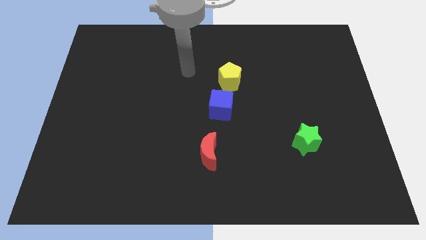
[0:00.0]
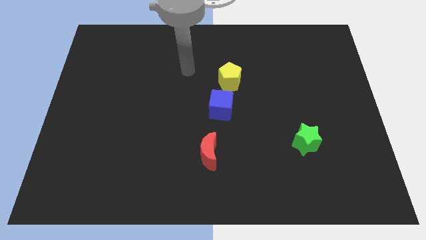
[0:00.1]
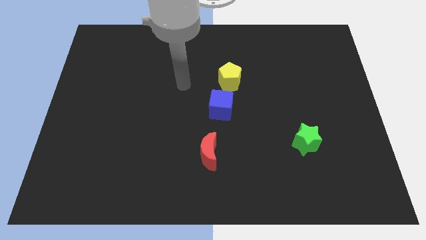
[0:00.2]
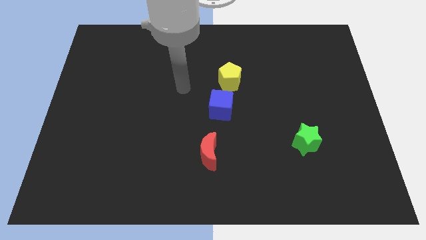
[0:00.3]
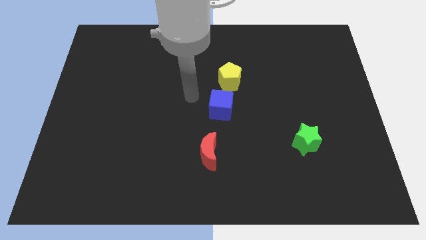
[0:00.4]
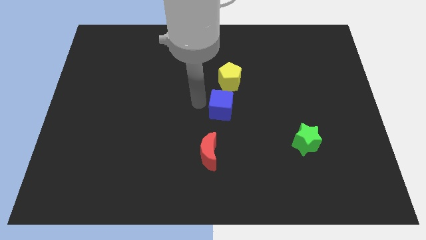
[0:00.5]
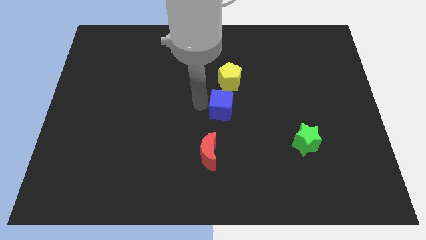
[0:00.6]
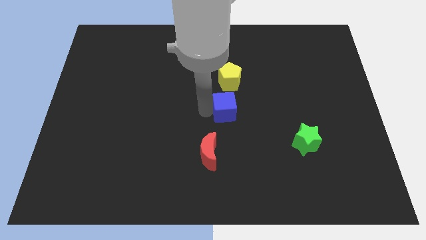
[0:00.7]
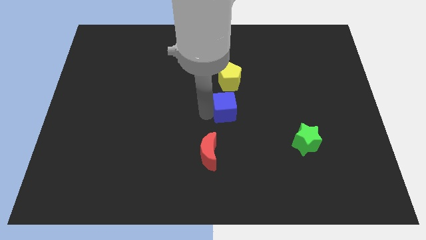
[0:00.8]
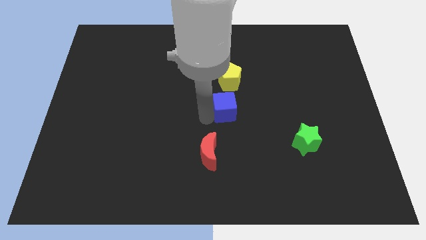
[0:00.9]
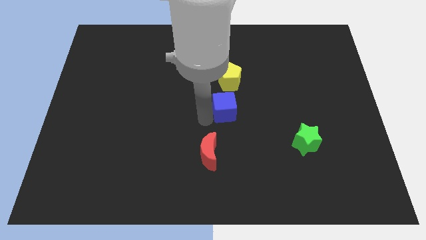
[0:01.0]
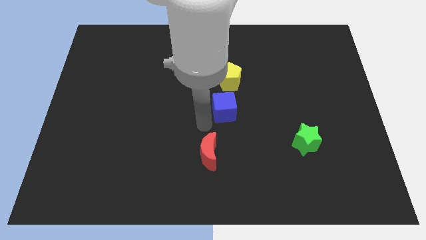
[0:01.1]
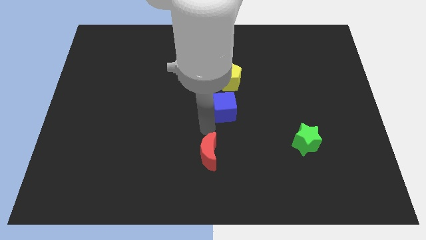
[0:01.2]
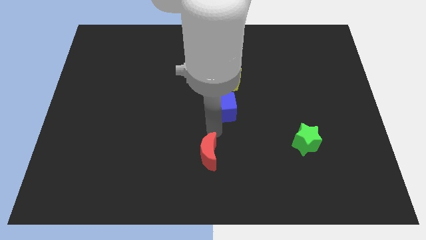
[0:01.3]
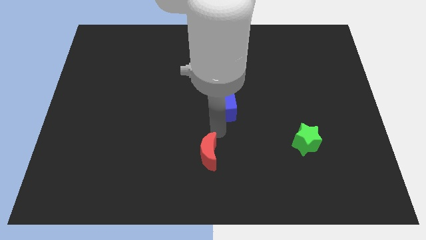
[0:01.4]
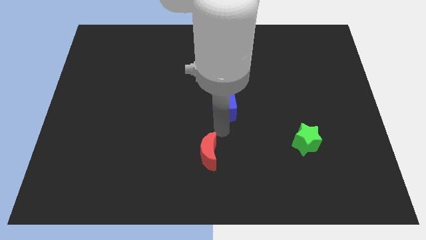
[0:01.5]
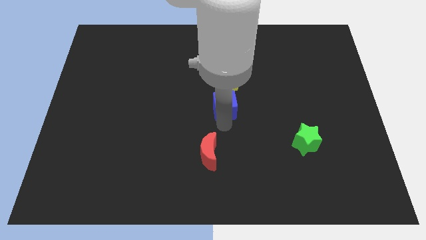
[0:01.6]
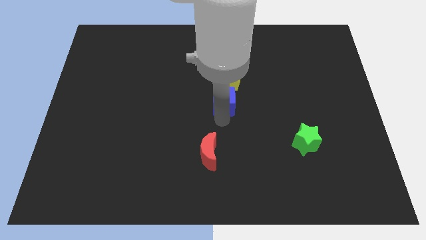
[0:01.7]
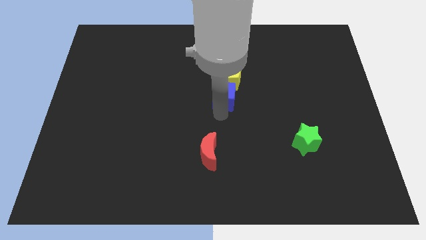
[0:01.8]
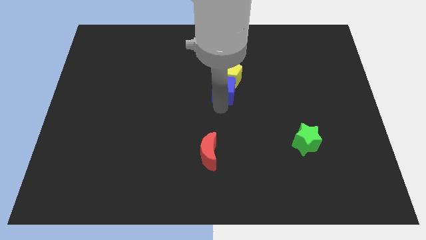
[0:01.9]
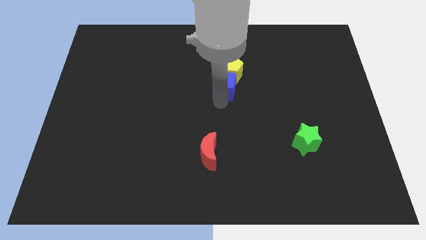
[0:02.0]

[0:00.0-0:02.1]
push the blue block to the yellow pentagon

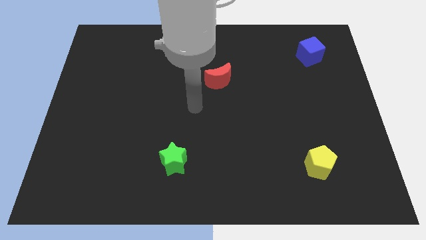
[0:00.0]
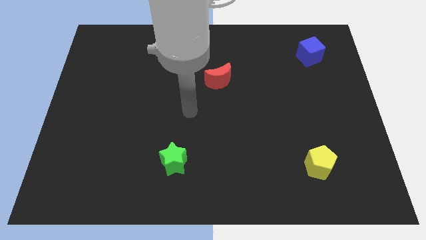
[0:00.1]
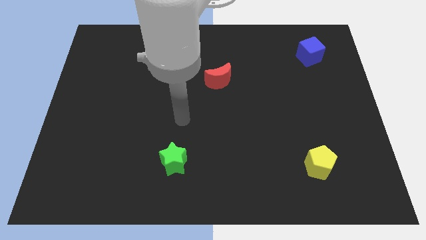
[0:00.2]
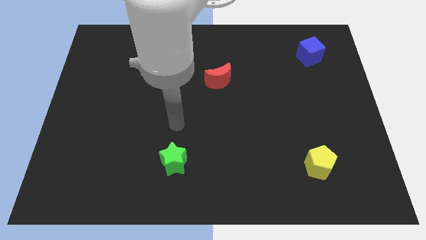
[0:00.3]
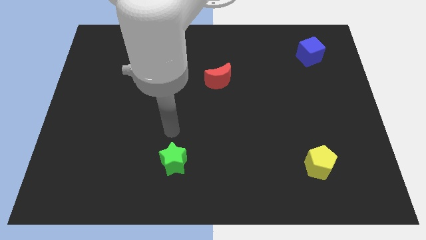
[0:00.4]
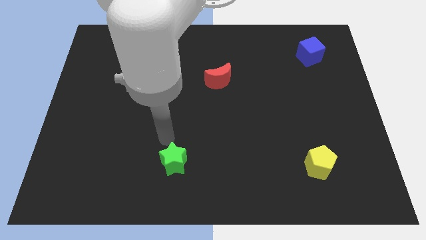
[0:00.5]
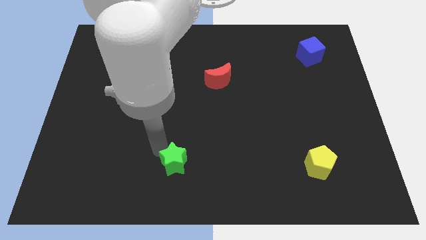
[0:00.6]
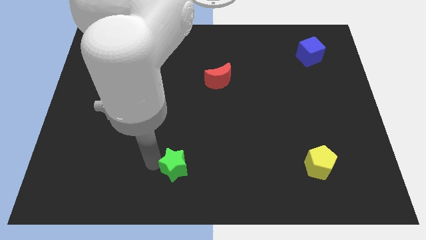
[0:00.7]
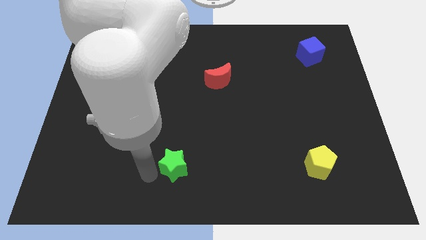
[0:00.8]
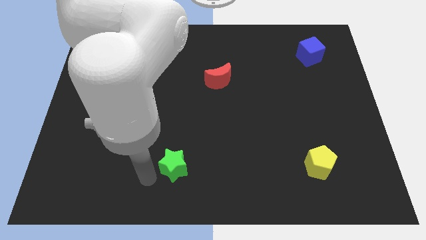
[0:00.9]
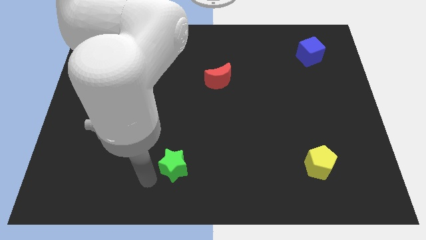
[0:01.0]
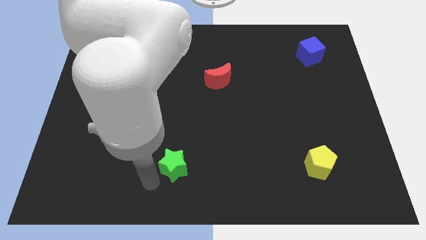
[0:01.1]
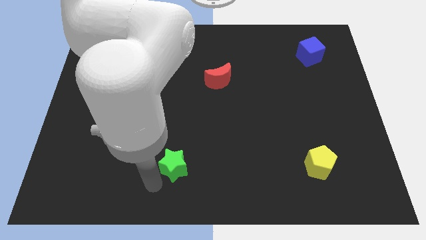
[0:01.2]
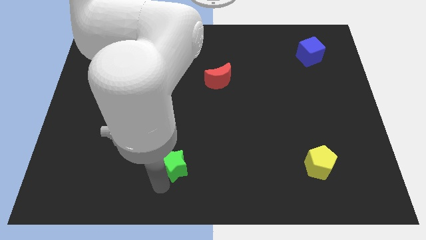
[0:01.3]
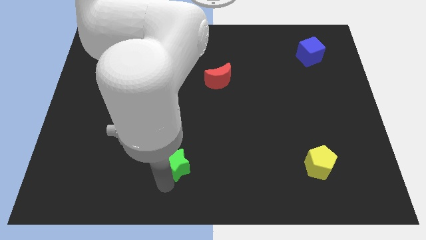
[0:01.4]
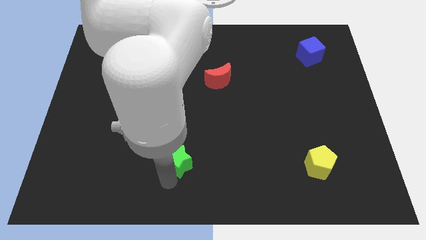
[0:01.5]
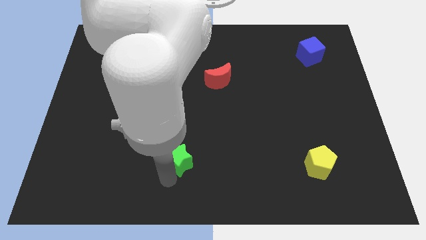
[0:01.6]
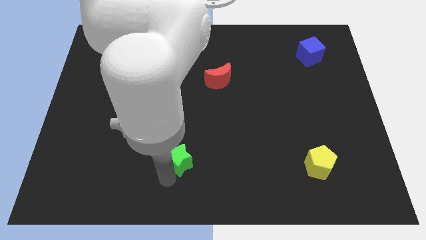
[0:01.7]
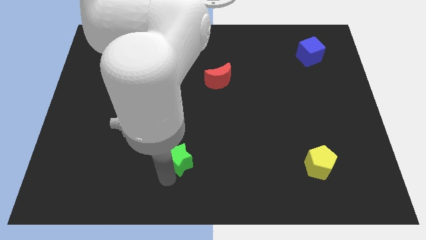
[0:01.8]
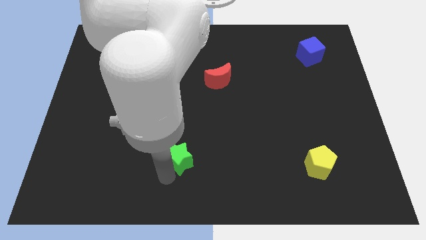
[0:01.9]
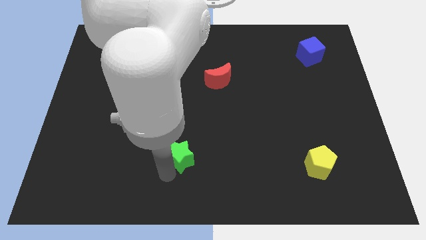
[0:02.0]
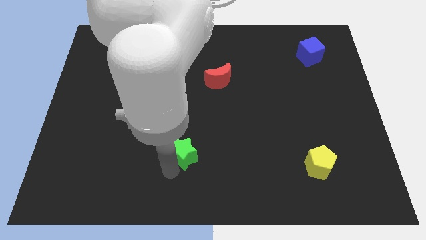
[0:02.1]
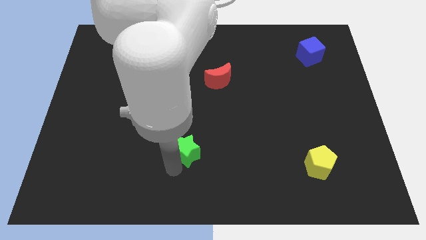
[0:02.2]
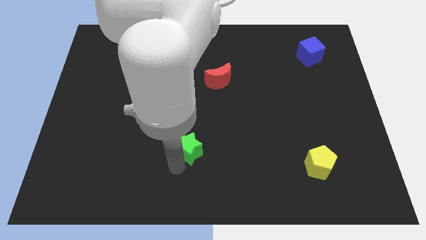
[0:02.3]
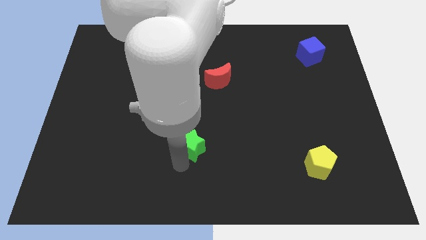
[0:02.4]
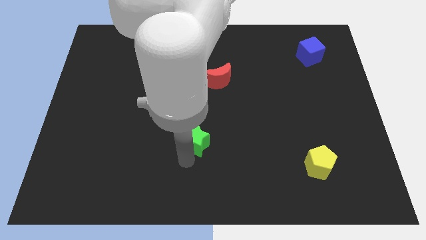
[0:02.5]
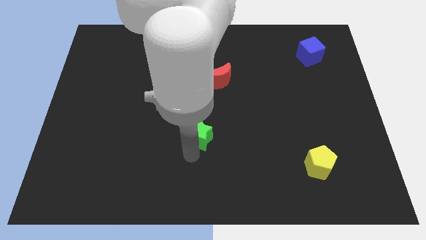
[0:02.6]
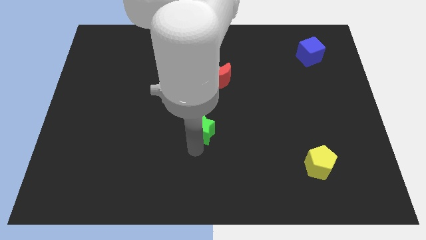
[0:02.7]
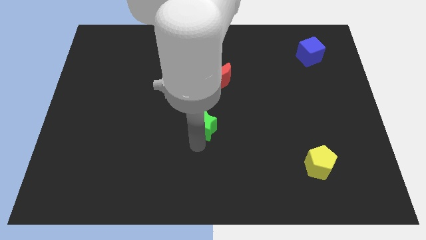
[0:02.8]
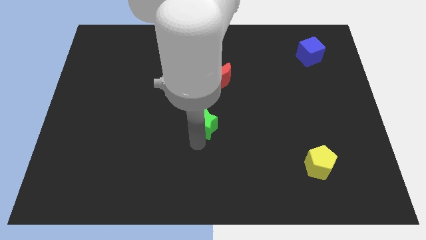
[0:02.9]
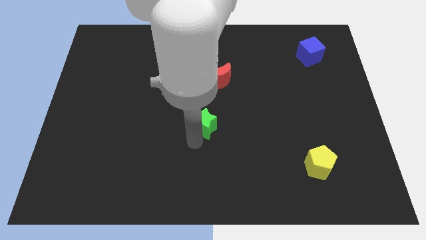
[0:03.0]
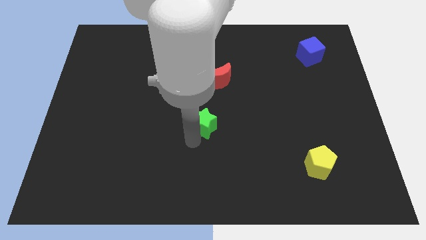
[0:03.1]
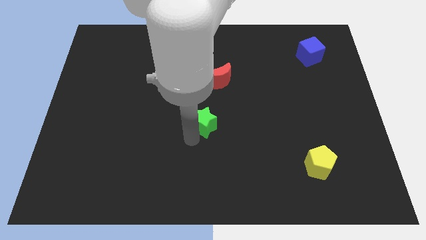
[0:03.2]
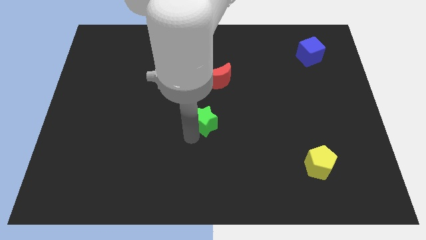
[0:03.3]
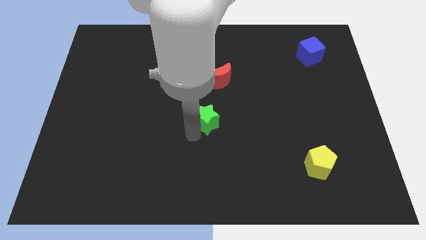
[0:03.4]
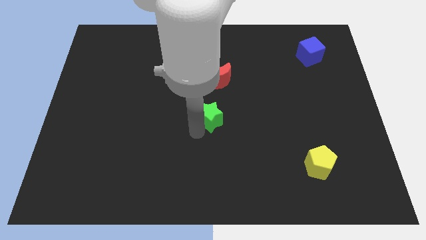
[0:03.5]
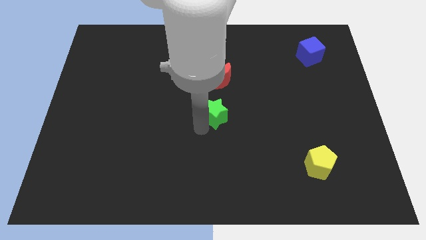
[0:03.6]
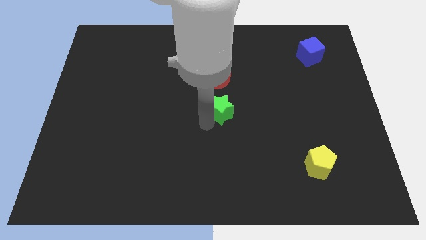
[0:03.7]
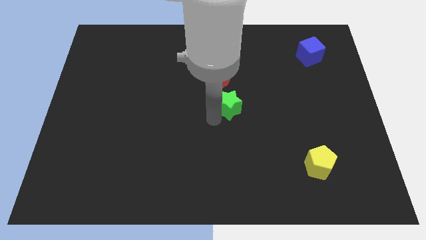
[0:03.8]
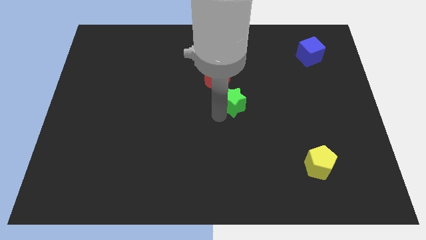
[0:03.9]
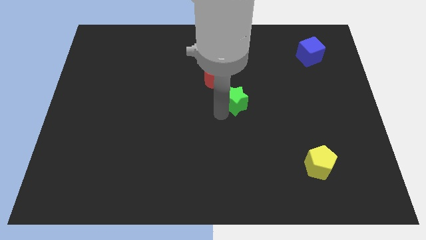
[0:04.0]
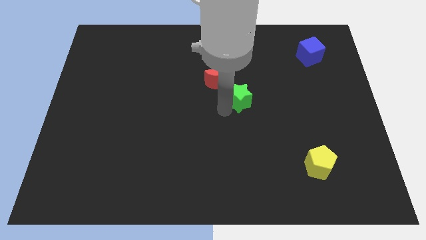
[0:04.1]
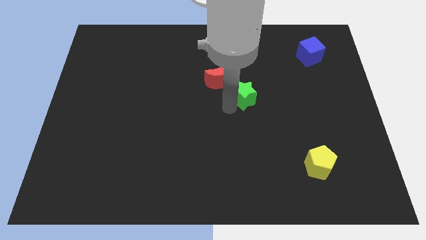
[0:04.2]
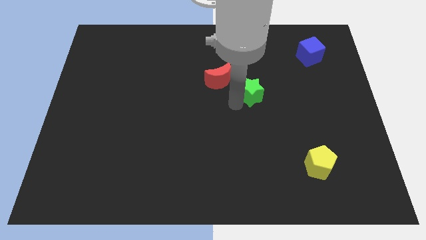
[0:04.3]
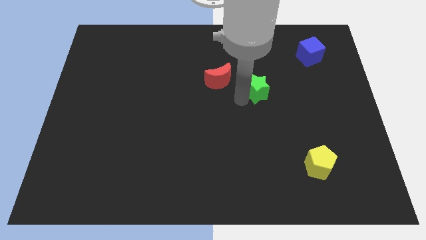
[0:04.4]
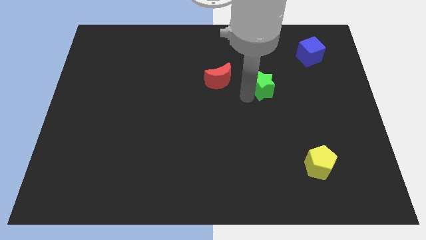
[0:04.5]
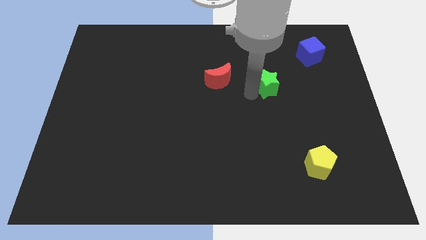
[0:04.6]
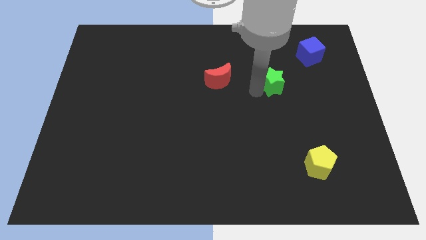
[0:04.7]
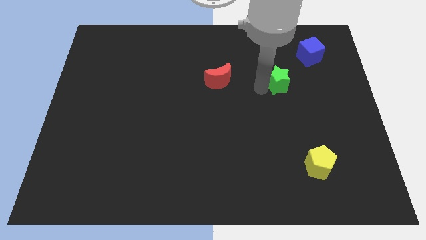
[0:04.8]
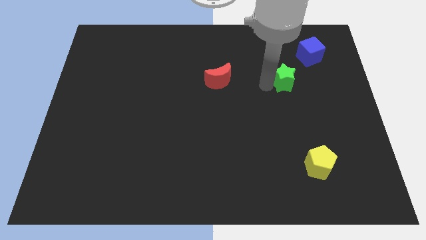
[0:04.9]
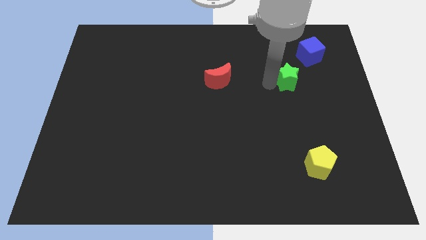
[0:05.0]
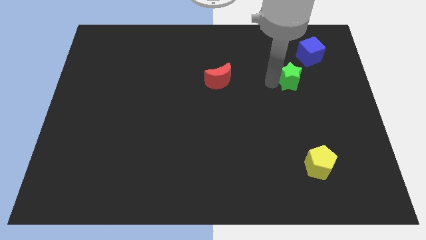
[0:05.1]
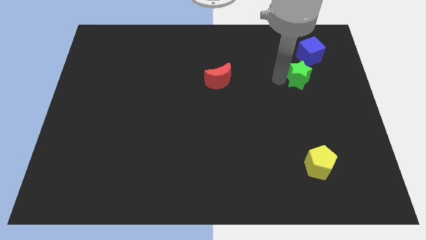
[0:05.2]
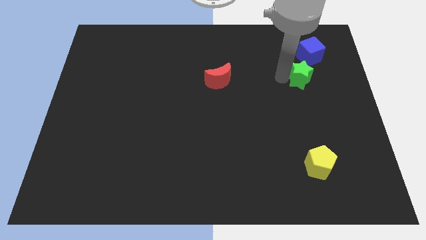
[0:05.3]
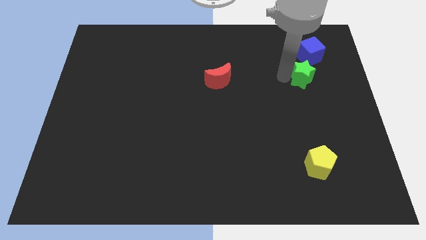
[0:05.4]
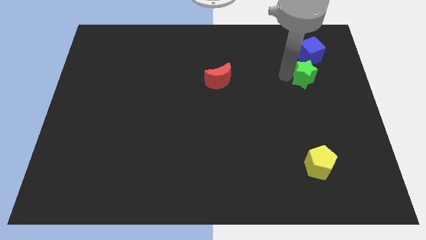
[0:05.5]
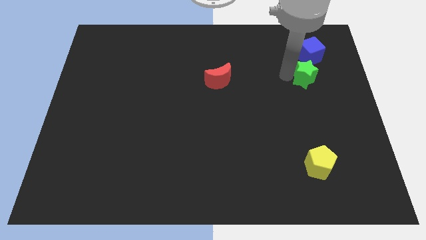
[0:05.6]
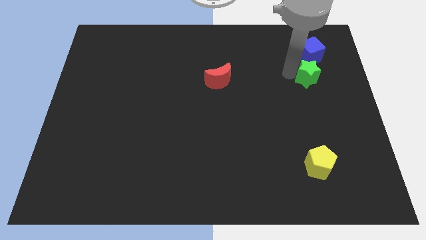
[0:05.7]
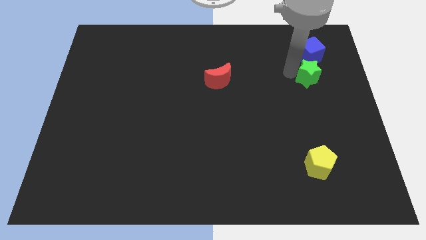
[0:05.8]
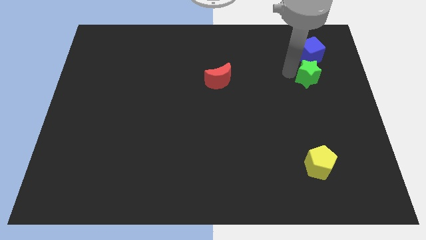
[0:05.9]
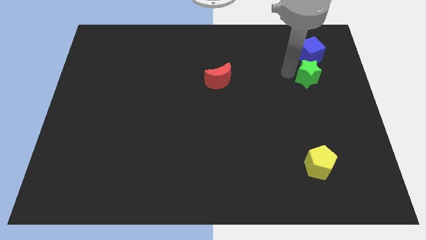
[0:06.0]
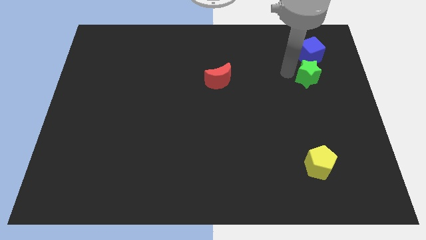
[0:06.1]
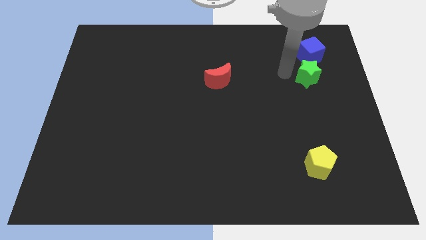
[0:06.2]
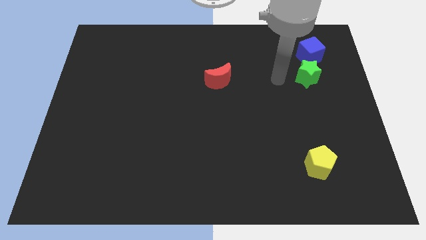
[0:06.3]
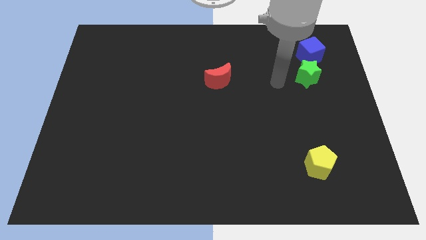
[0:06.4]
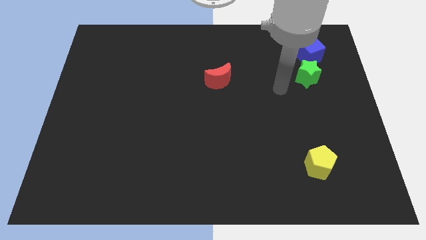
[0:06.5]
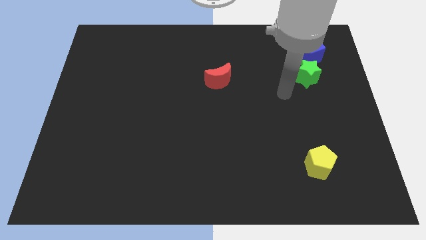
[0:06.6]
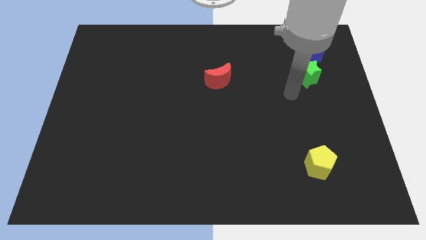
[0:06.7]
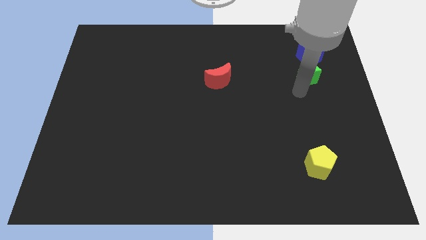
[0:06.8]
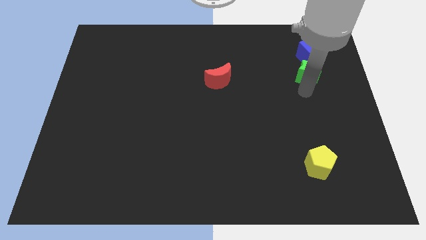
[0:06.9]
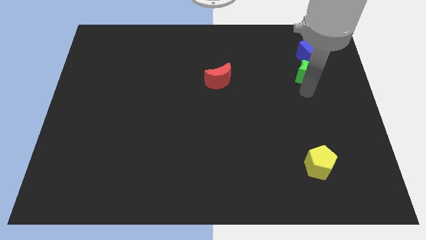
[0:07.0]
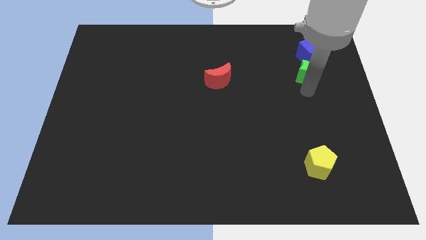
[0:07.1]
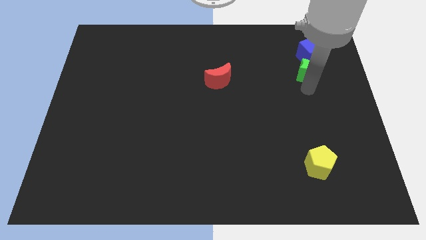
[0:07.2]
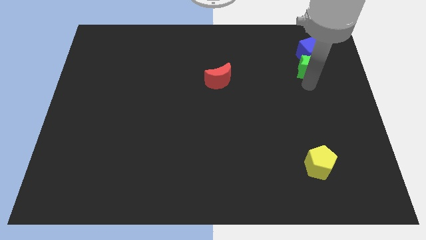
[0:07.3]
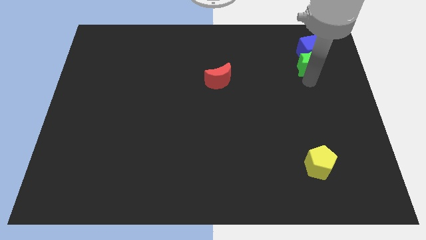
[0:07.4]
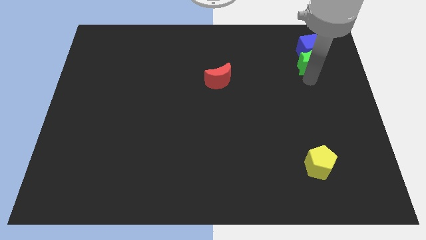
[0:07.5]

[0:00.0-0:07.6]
put the green block to the blue cube
